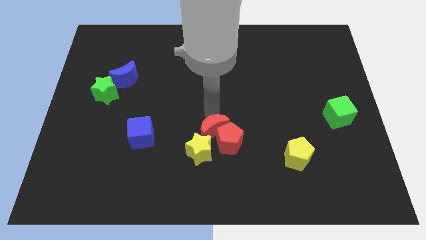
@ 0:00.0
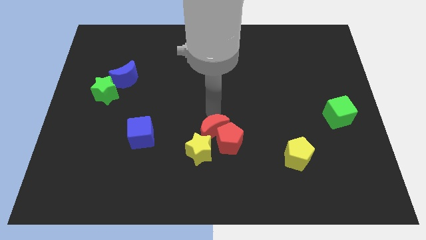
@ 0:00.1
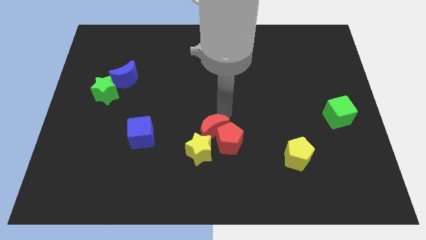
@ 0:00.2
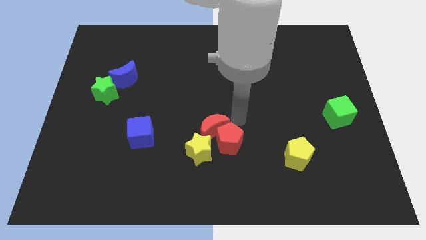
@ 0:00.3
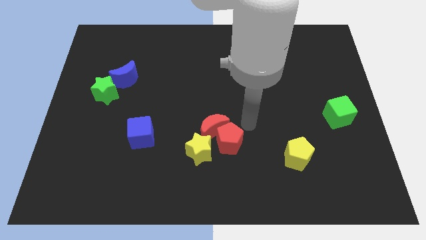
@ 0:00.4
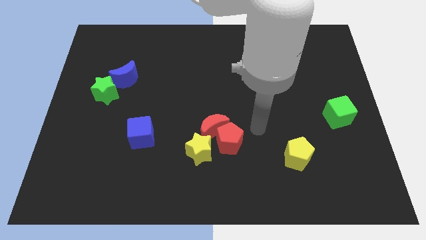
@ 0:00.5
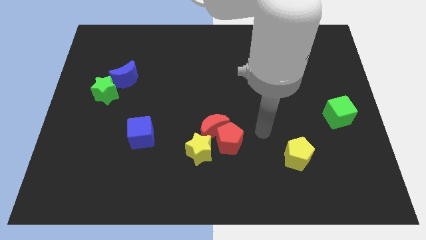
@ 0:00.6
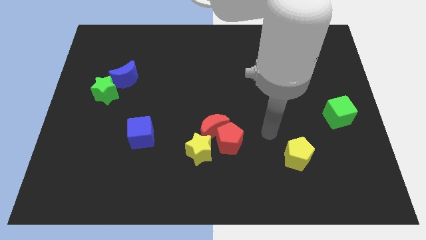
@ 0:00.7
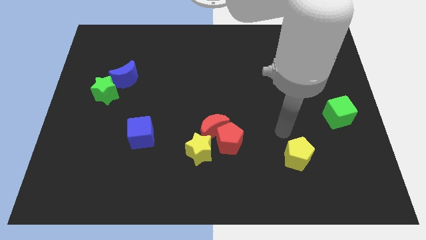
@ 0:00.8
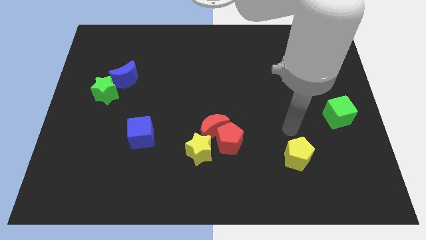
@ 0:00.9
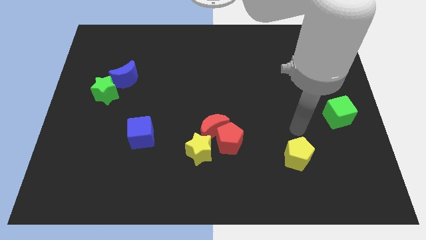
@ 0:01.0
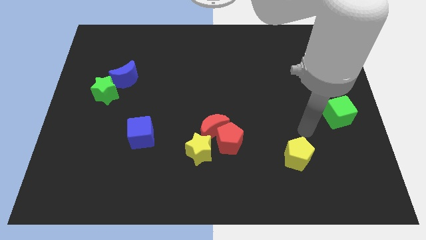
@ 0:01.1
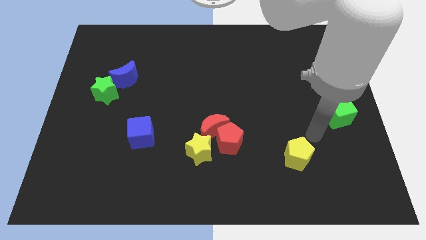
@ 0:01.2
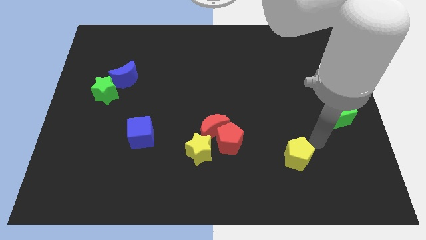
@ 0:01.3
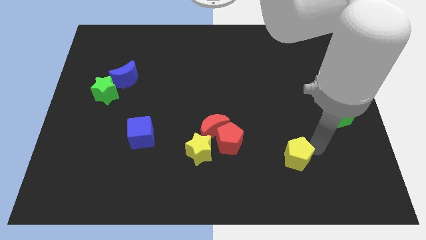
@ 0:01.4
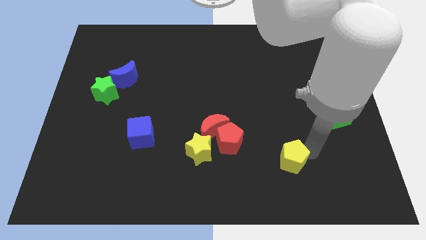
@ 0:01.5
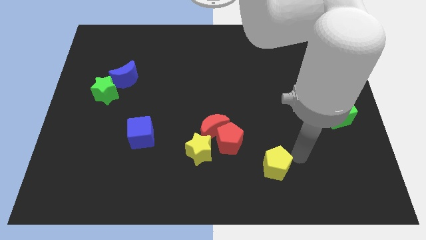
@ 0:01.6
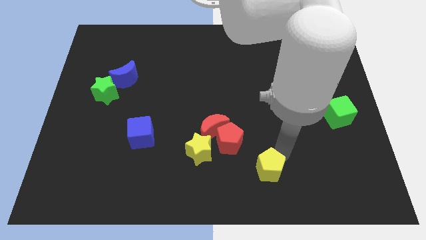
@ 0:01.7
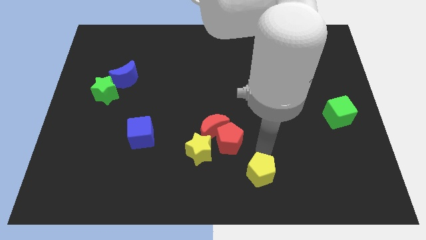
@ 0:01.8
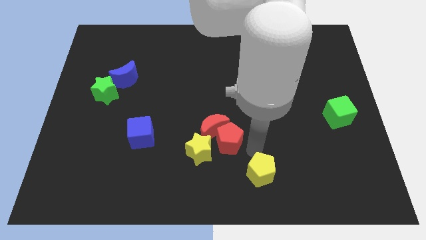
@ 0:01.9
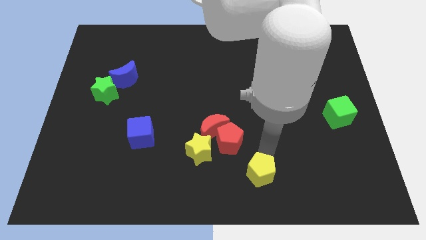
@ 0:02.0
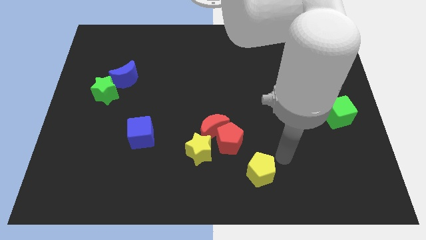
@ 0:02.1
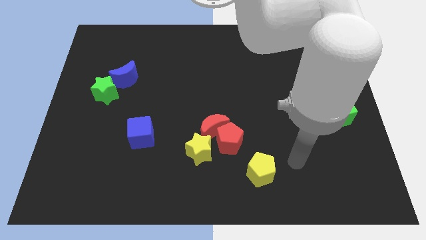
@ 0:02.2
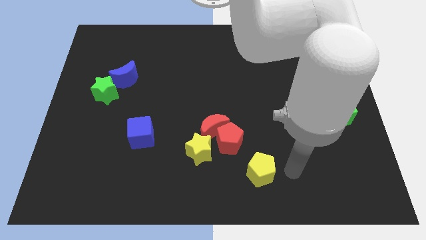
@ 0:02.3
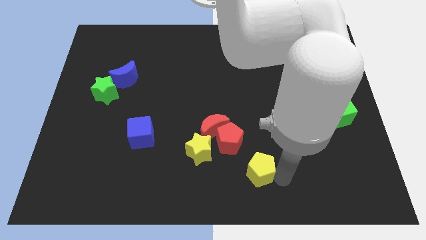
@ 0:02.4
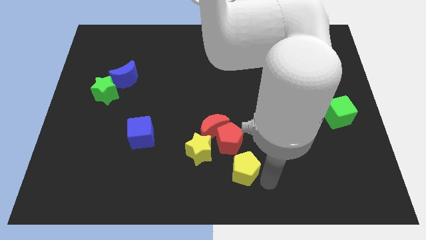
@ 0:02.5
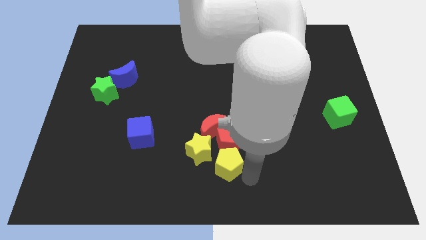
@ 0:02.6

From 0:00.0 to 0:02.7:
place the yellow pentagon below the red pentagon

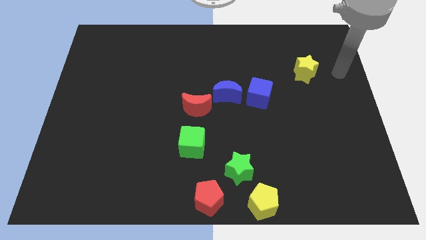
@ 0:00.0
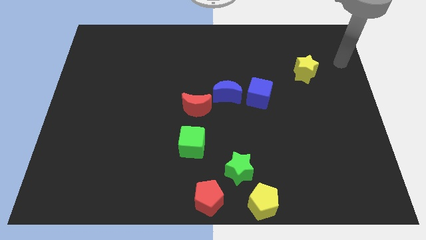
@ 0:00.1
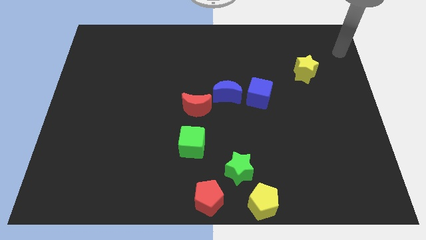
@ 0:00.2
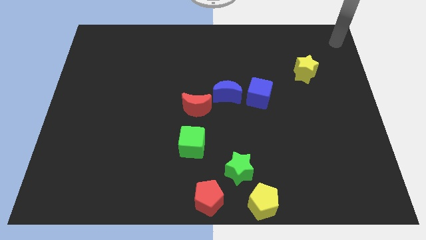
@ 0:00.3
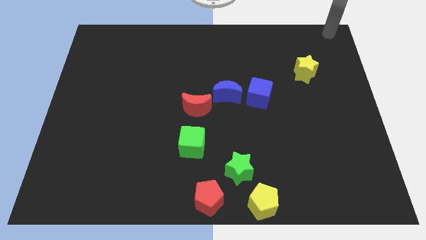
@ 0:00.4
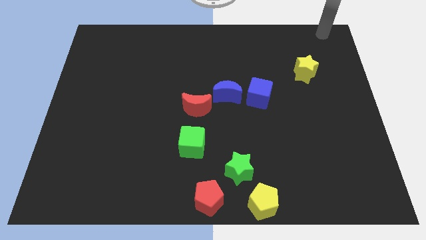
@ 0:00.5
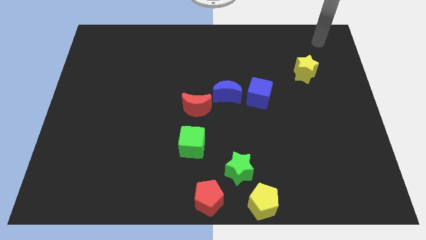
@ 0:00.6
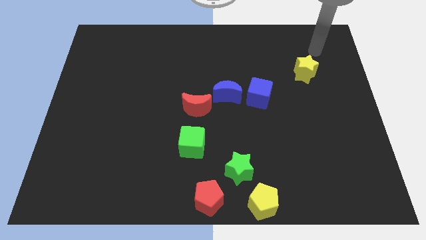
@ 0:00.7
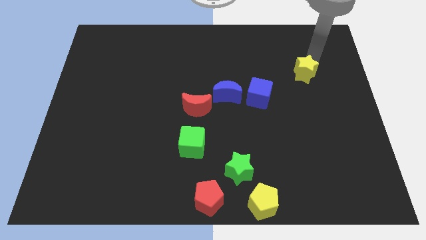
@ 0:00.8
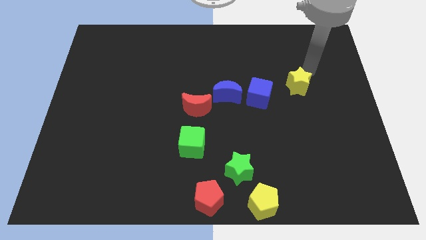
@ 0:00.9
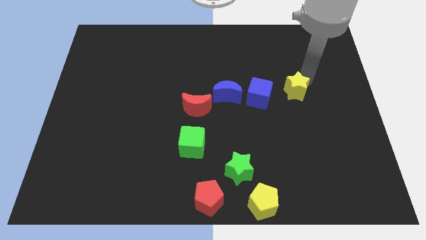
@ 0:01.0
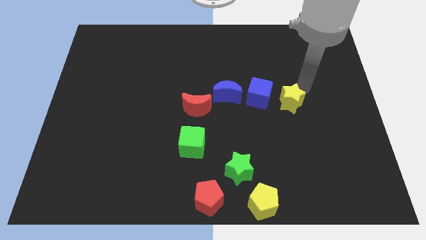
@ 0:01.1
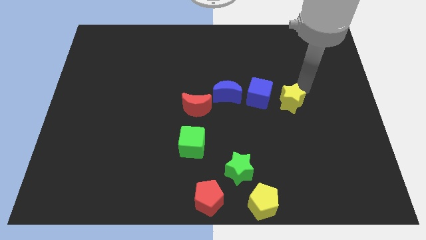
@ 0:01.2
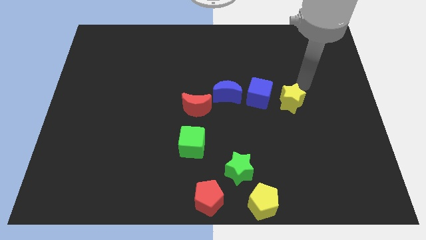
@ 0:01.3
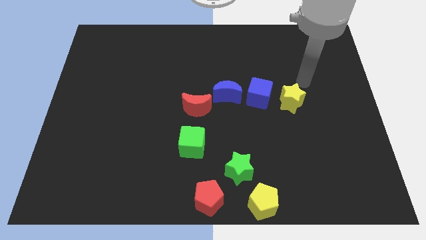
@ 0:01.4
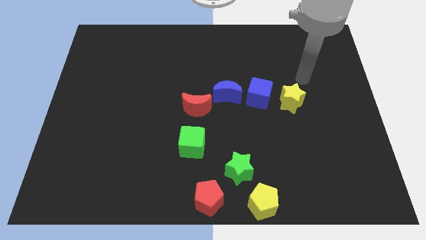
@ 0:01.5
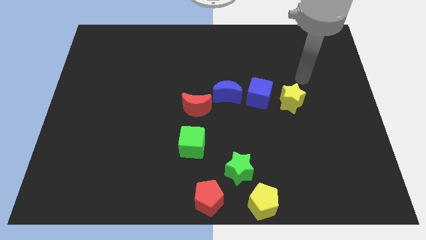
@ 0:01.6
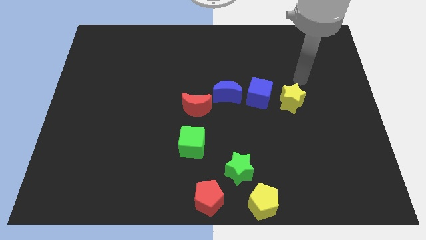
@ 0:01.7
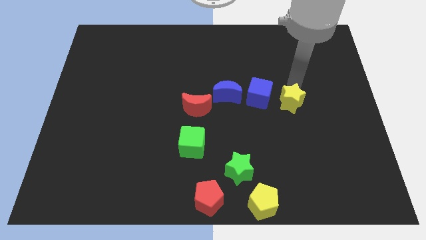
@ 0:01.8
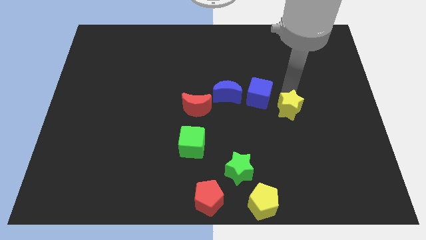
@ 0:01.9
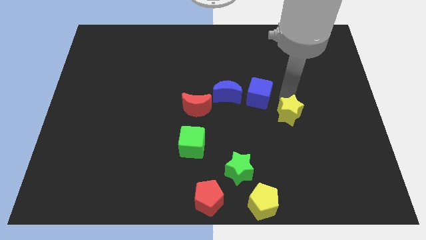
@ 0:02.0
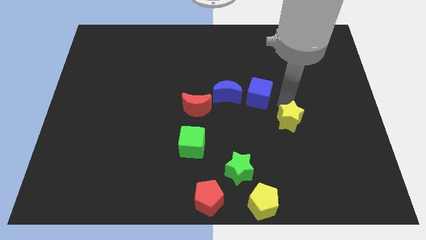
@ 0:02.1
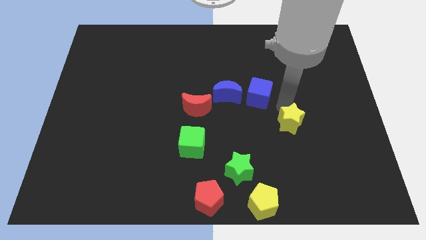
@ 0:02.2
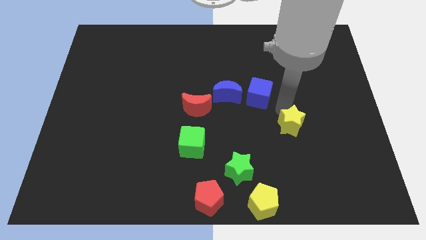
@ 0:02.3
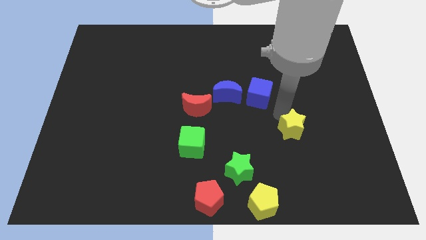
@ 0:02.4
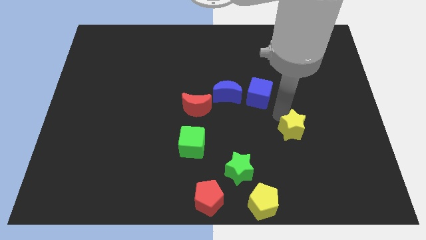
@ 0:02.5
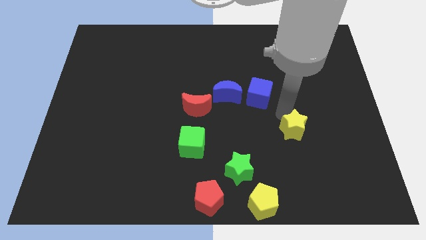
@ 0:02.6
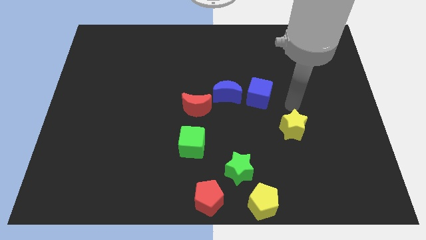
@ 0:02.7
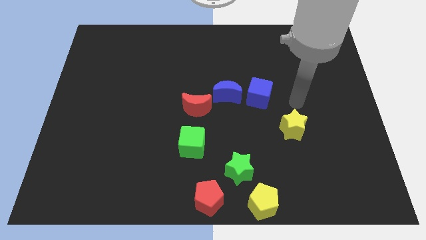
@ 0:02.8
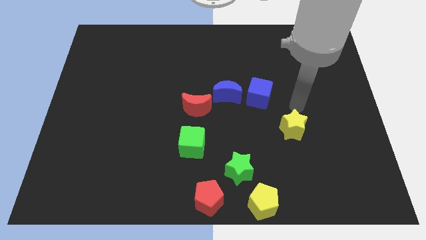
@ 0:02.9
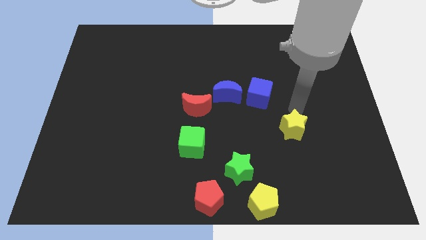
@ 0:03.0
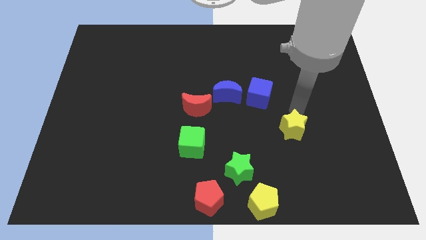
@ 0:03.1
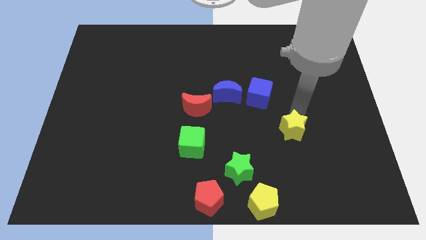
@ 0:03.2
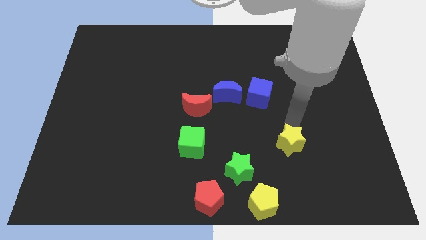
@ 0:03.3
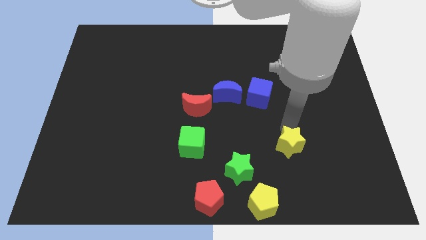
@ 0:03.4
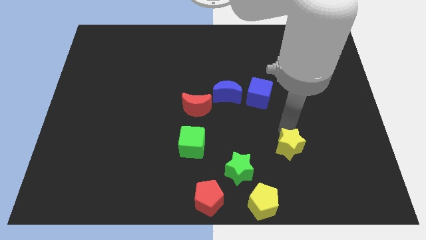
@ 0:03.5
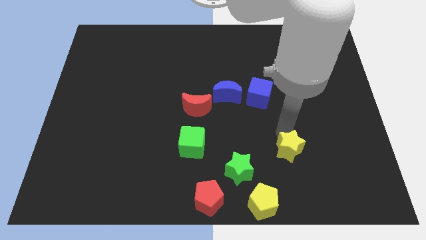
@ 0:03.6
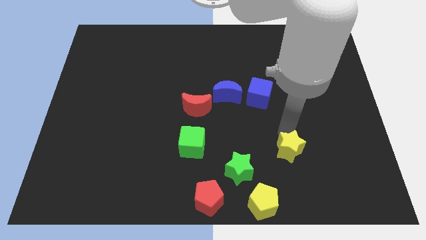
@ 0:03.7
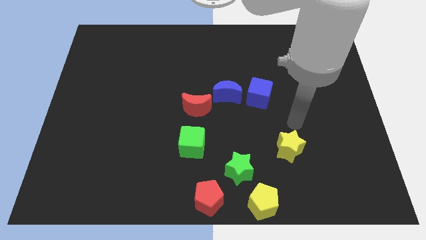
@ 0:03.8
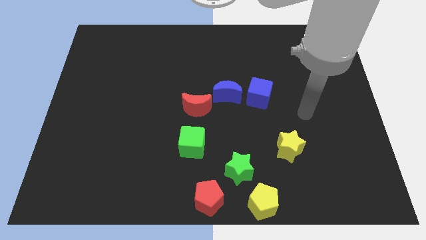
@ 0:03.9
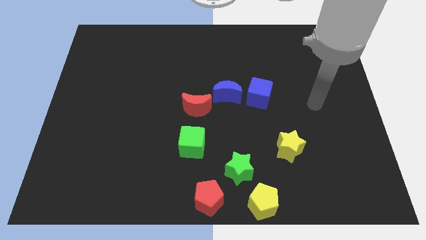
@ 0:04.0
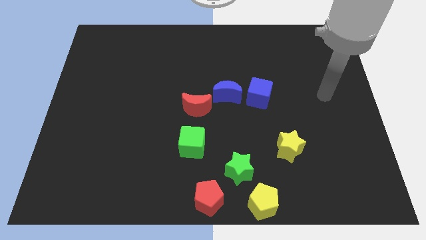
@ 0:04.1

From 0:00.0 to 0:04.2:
slide yellow star to the right of green cube

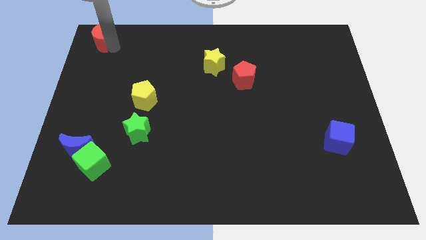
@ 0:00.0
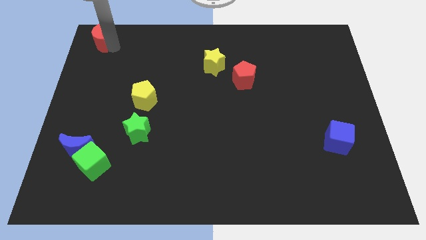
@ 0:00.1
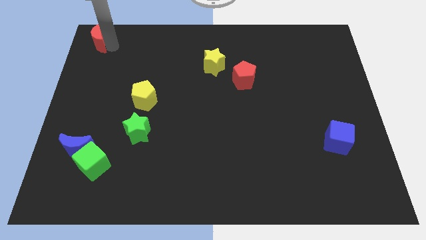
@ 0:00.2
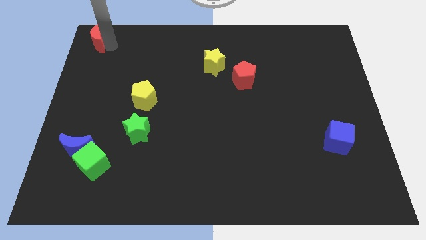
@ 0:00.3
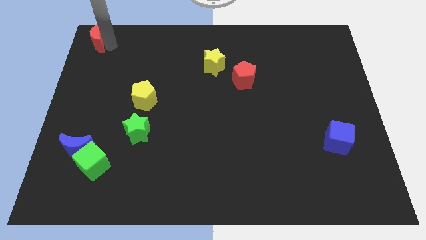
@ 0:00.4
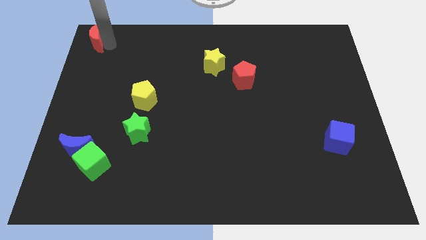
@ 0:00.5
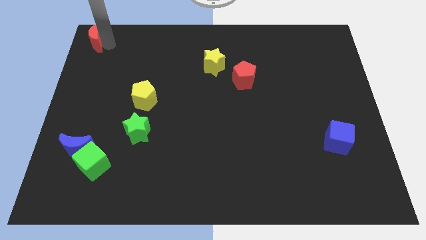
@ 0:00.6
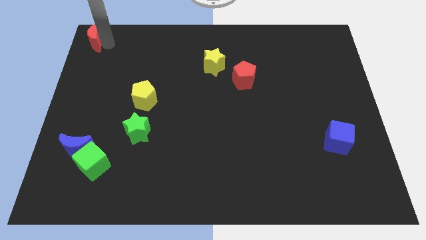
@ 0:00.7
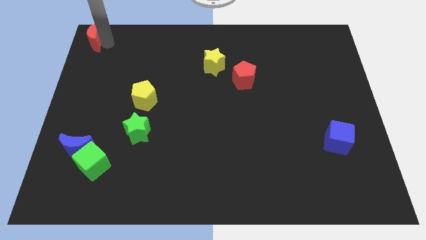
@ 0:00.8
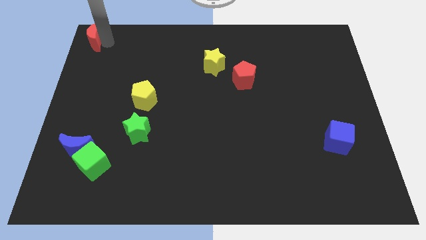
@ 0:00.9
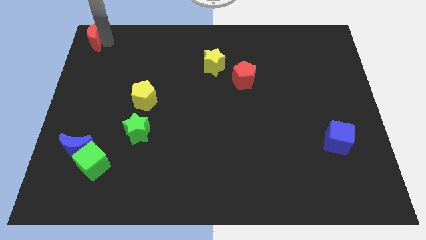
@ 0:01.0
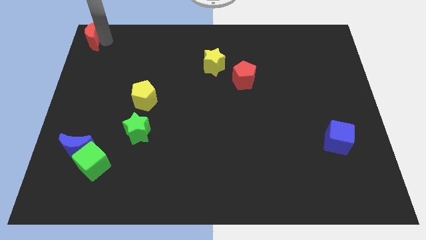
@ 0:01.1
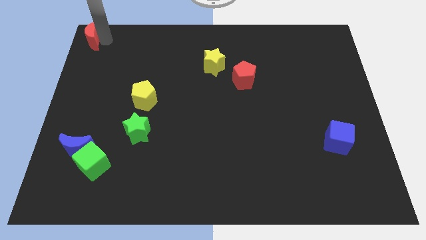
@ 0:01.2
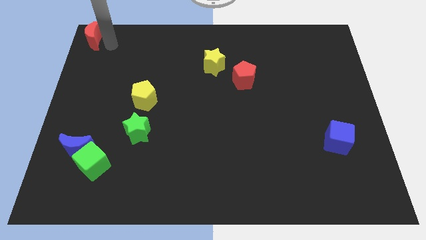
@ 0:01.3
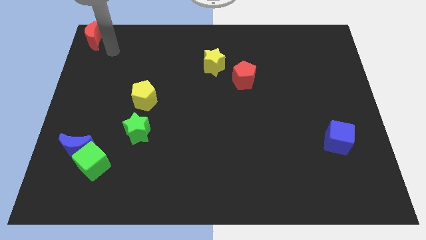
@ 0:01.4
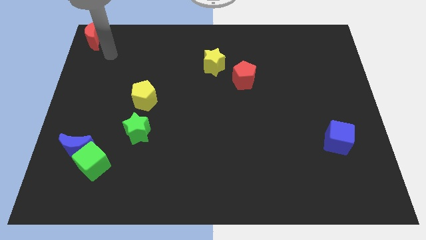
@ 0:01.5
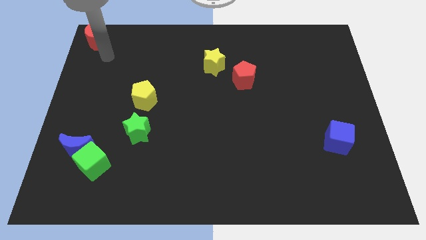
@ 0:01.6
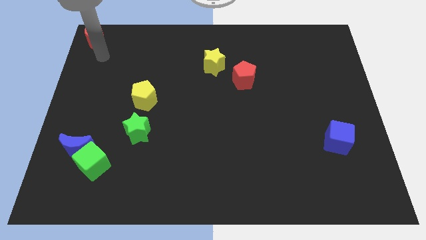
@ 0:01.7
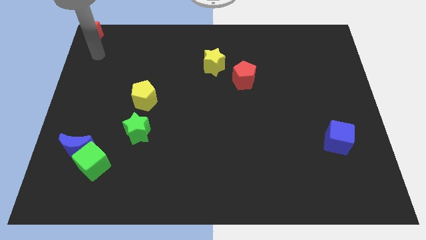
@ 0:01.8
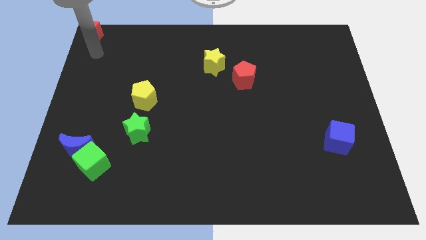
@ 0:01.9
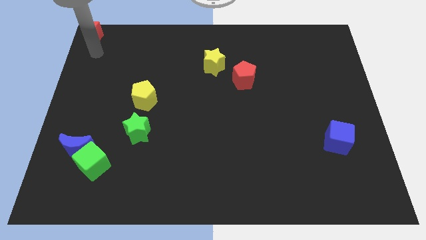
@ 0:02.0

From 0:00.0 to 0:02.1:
place the red moon towards the top left corner of the board
